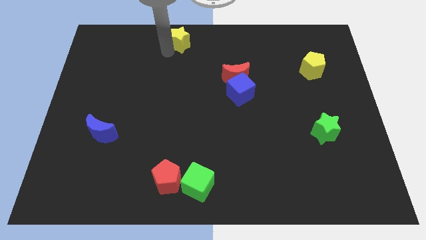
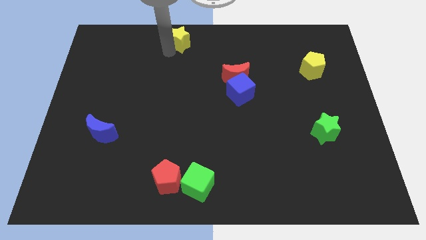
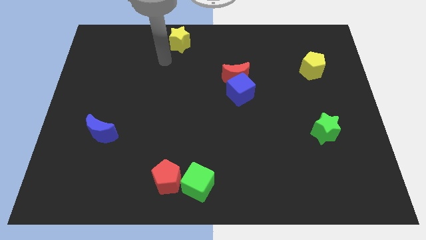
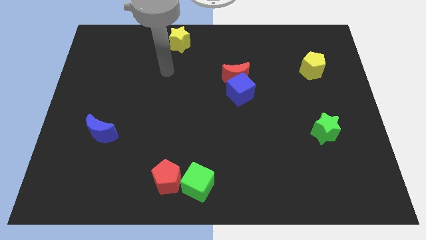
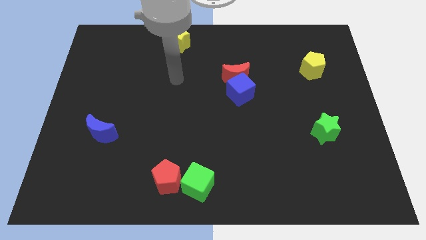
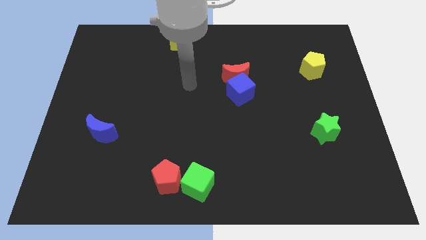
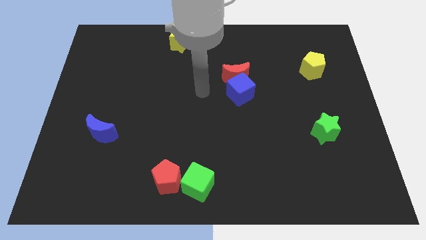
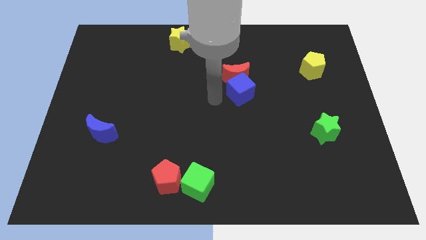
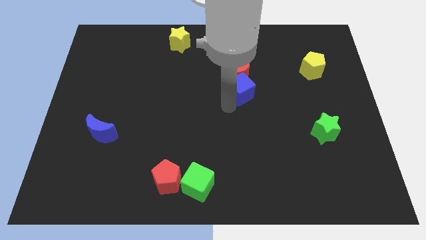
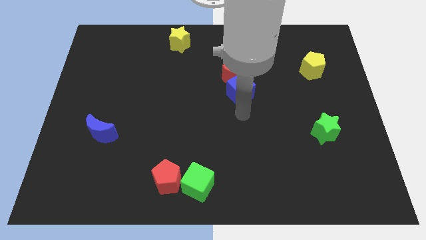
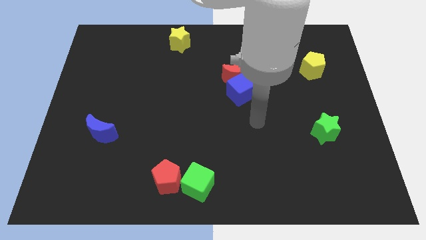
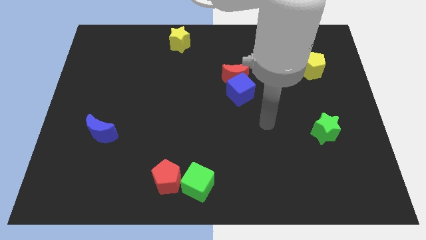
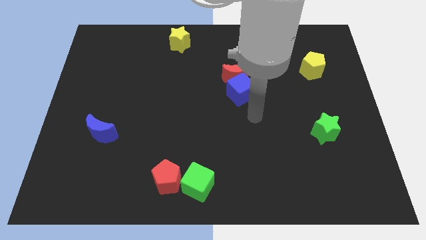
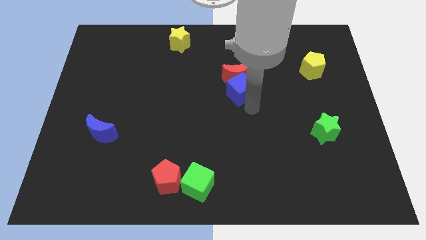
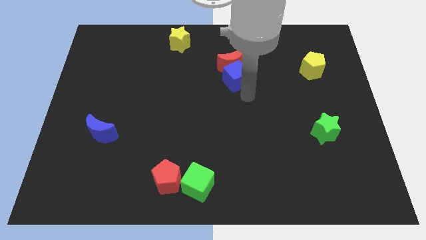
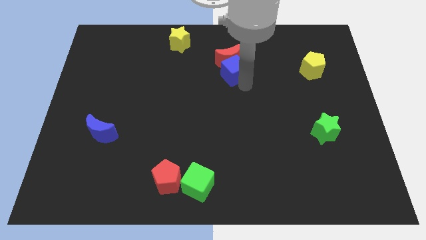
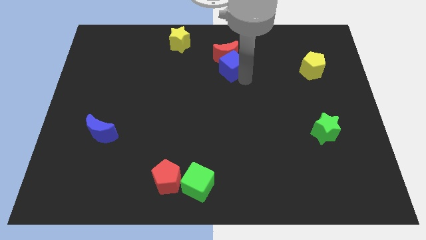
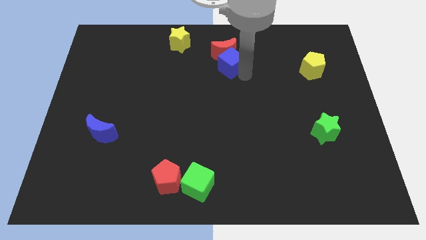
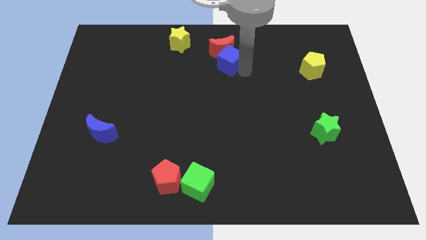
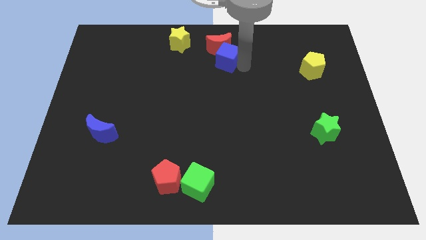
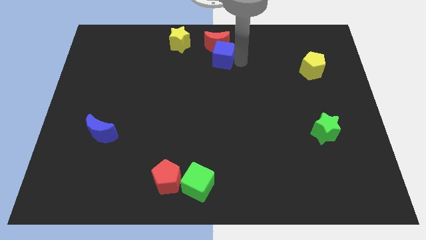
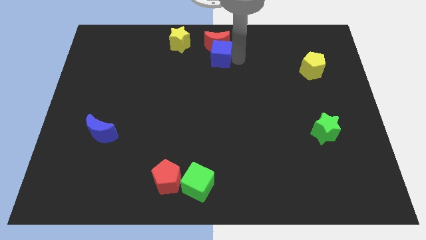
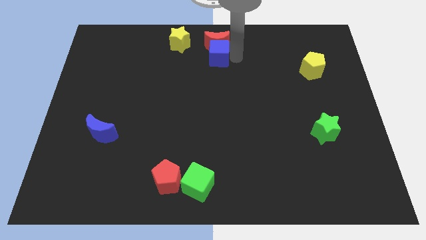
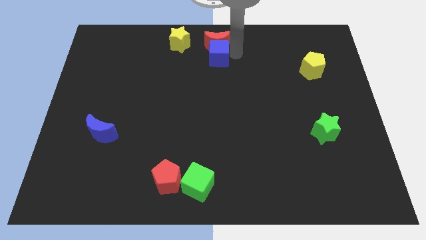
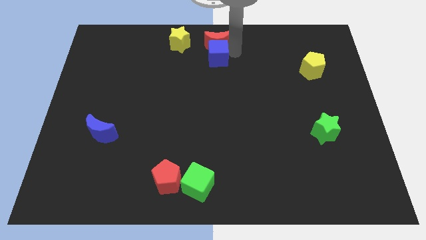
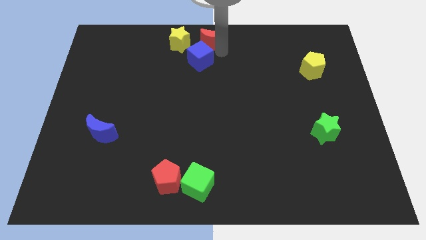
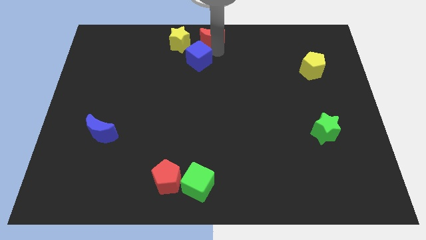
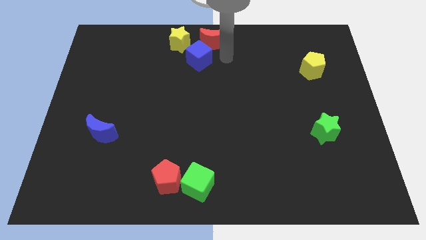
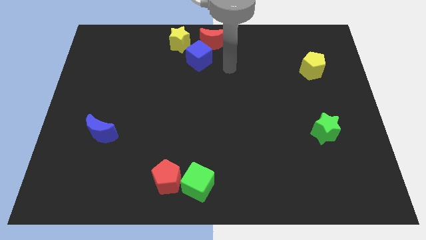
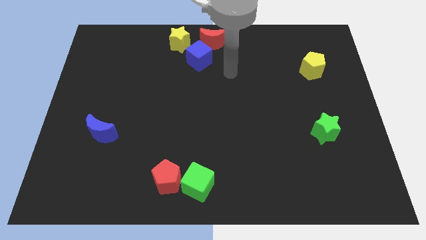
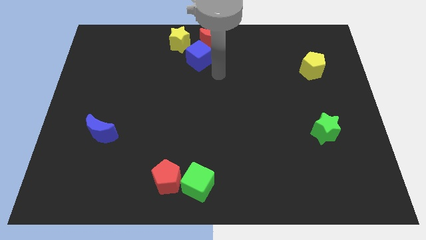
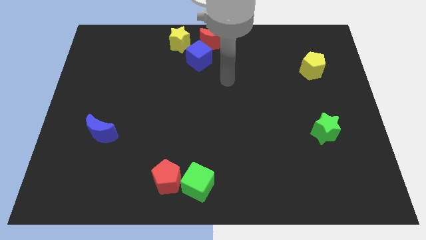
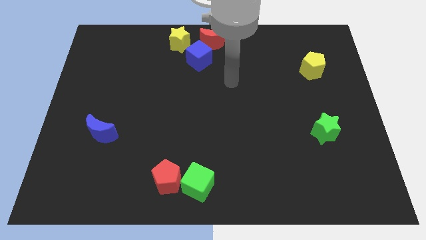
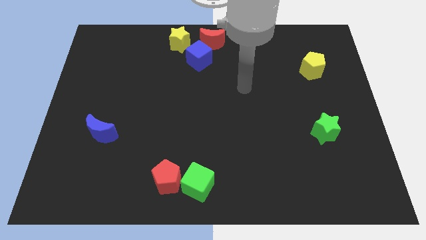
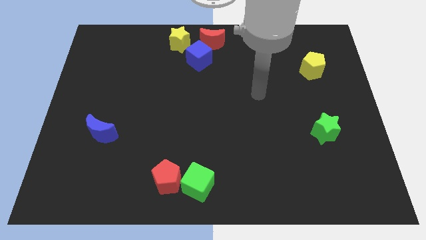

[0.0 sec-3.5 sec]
move blue cube and red moon to center top

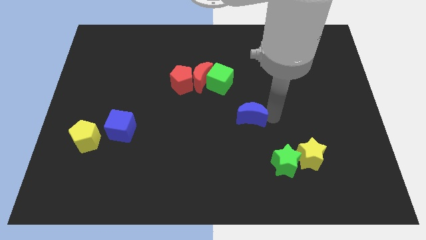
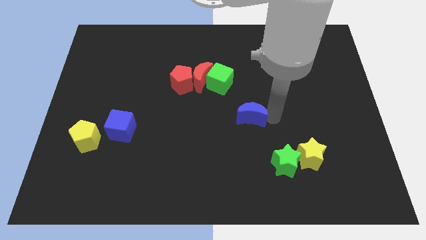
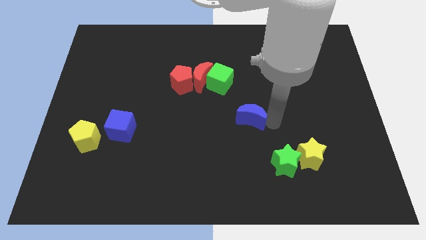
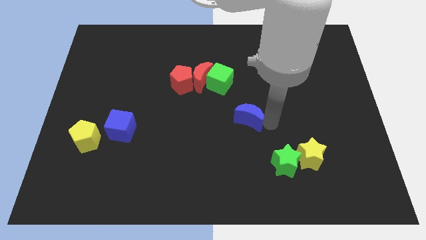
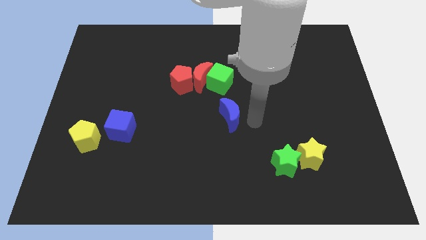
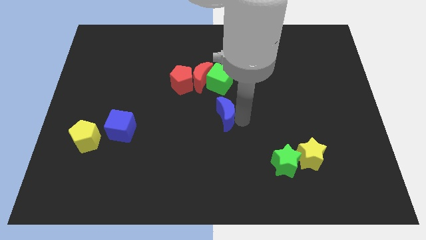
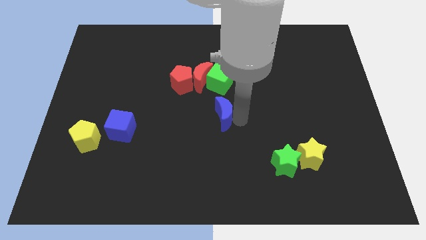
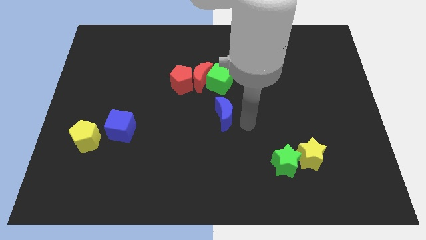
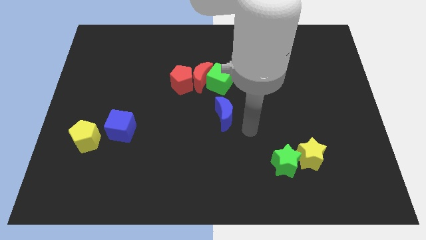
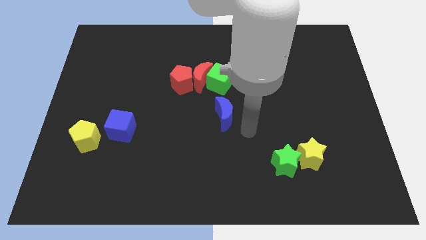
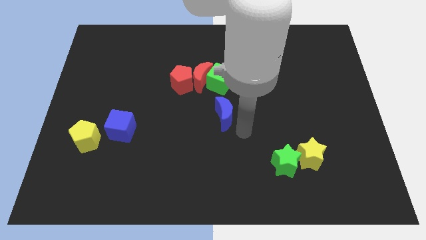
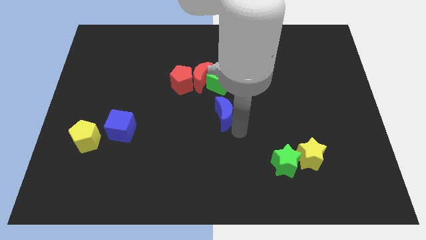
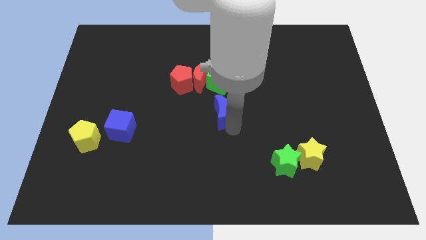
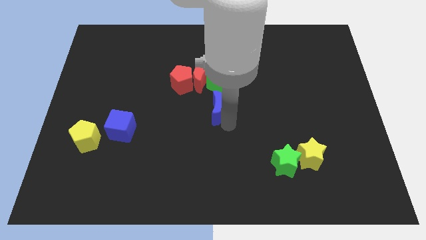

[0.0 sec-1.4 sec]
place the blue crescent below the green cube

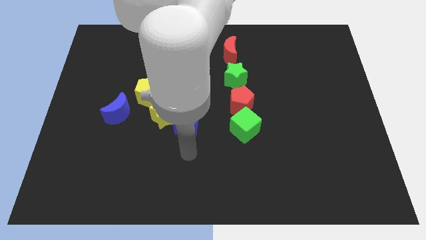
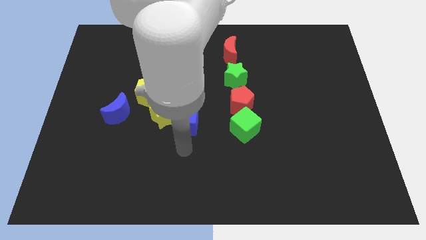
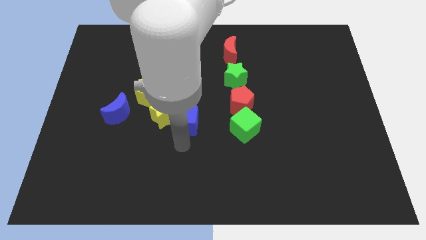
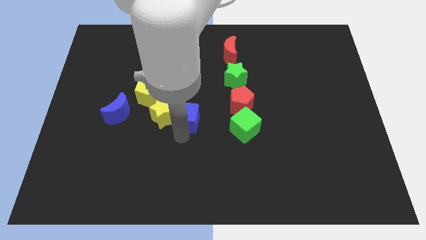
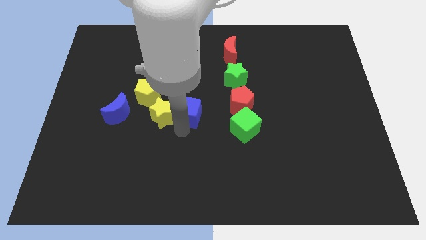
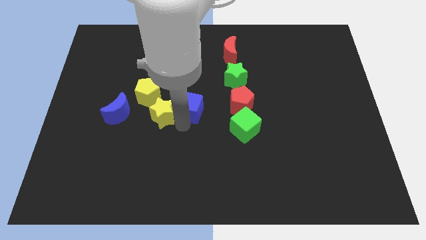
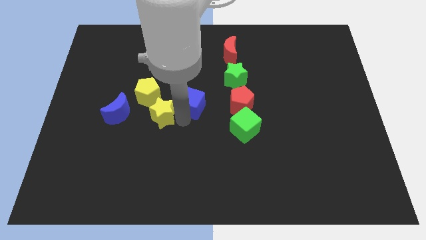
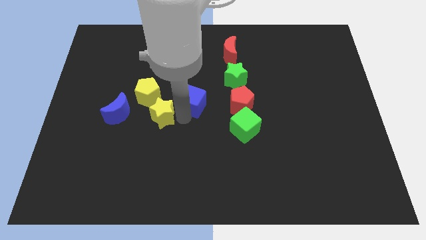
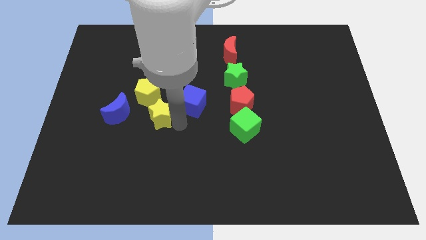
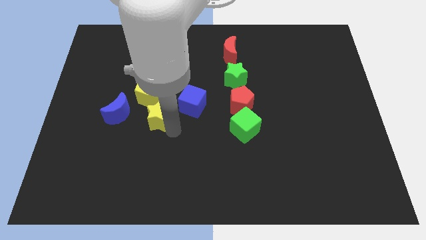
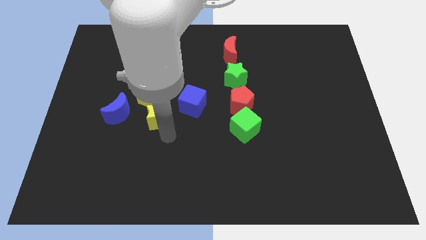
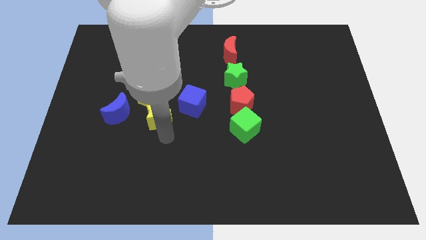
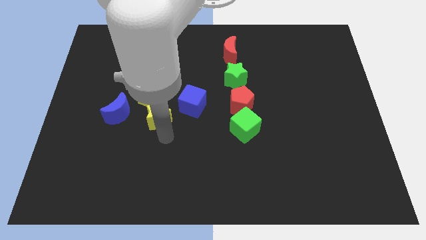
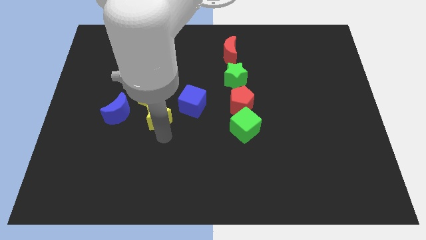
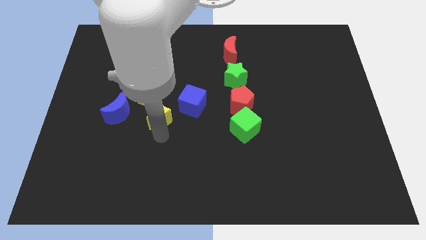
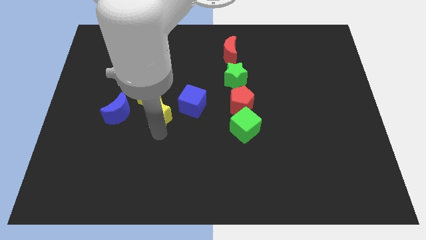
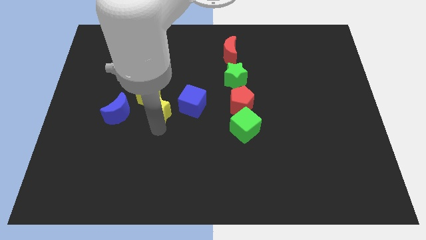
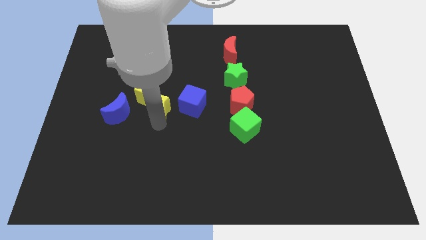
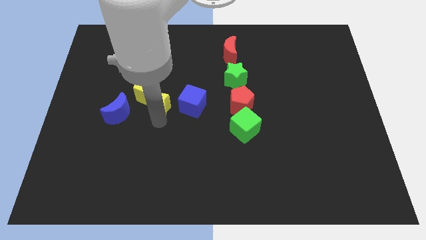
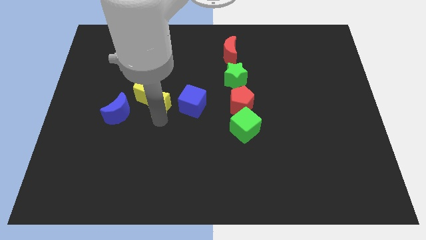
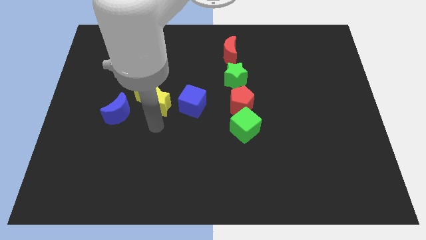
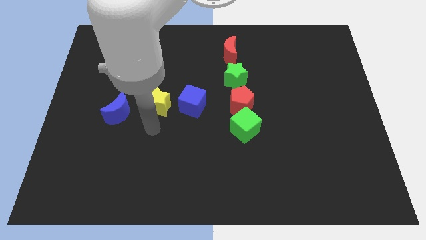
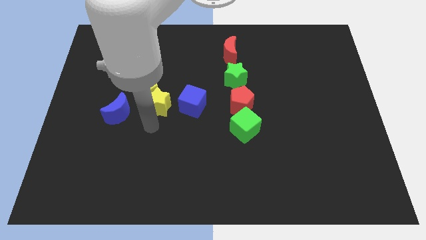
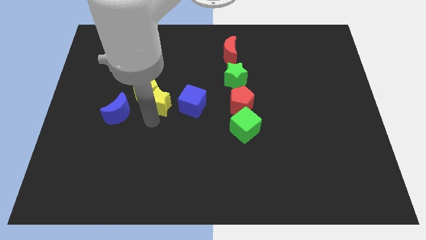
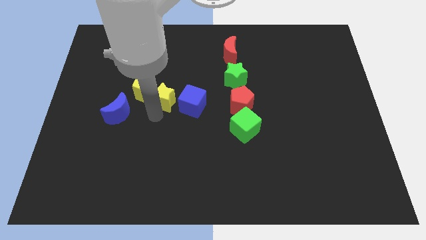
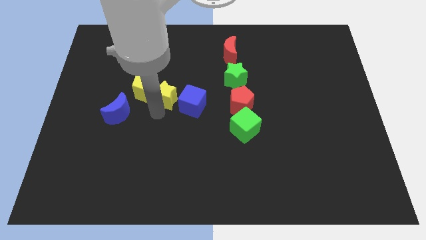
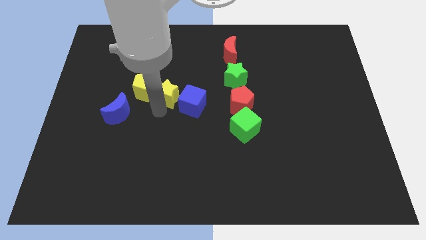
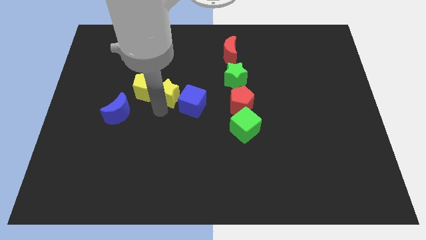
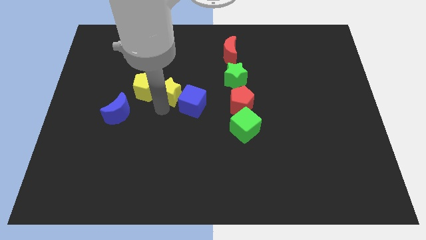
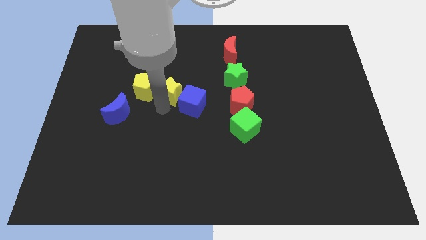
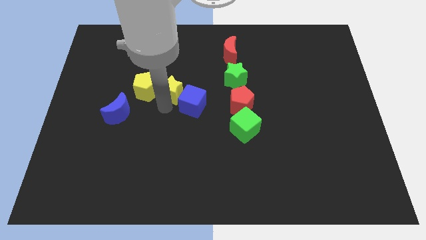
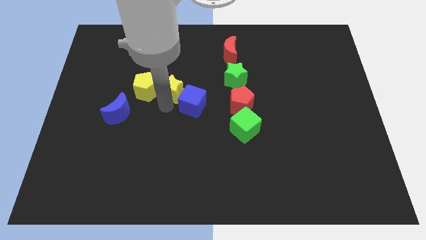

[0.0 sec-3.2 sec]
move the blue cube and yellow star diagonally on the bottom right side of the yellow pentagon

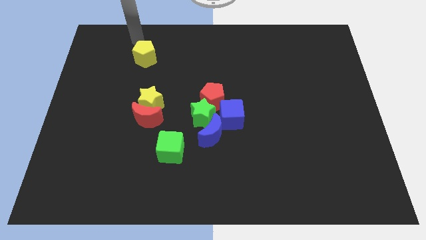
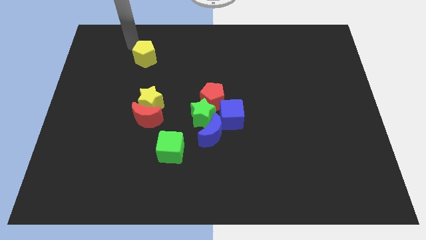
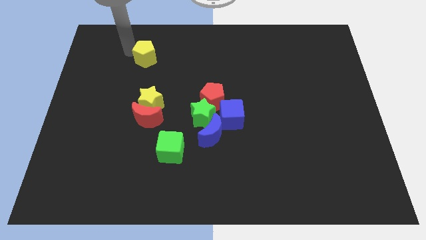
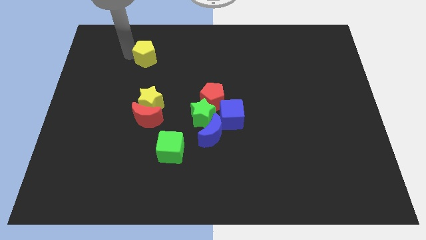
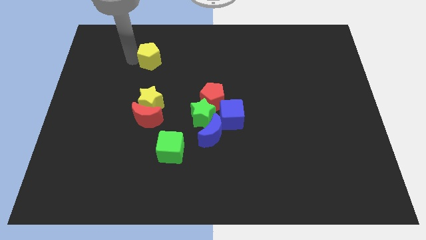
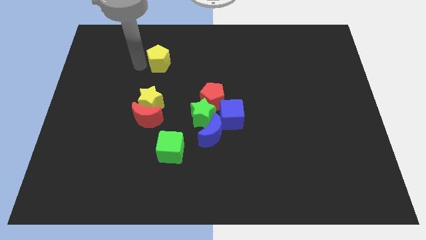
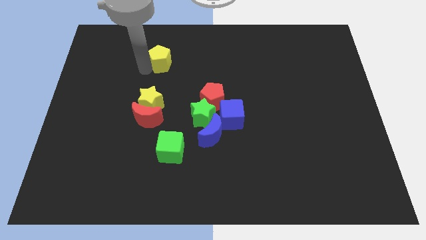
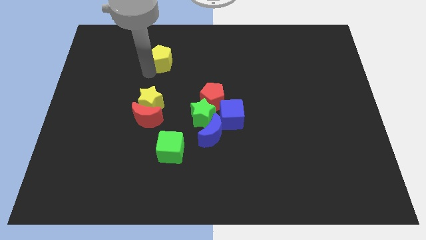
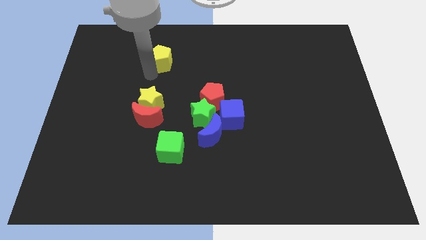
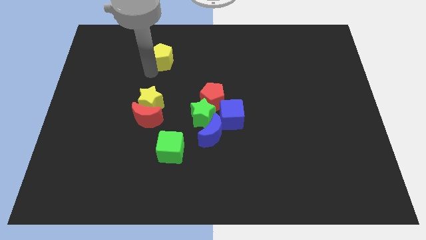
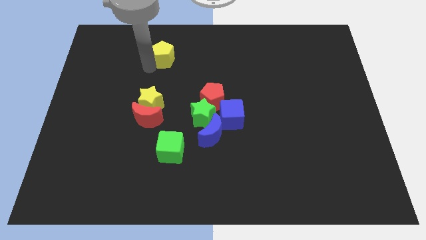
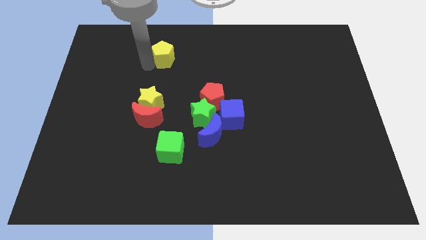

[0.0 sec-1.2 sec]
push the yellow pentagon slightly downwards
